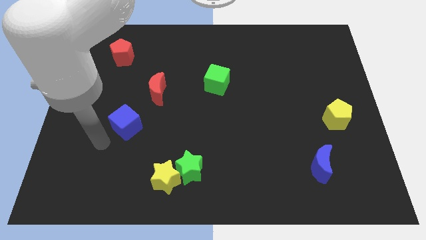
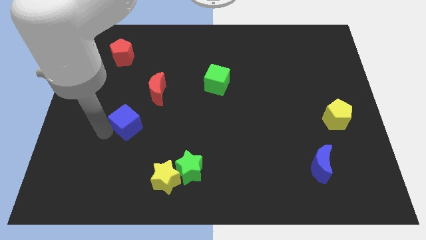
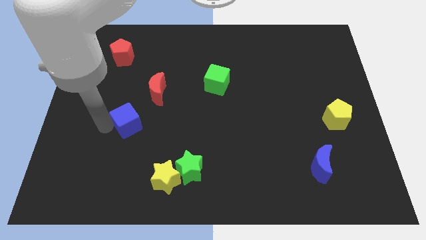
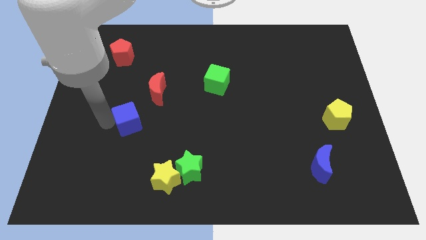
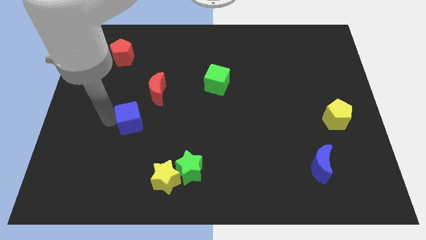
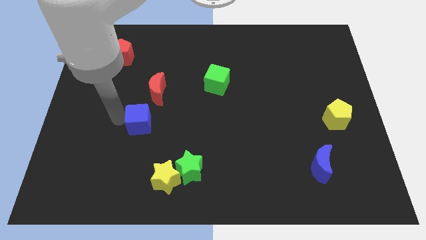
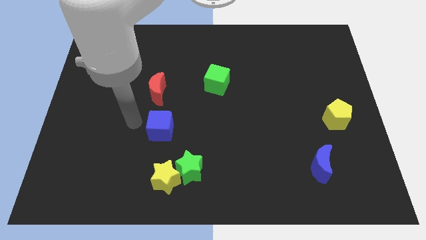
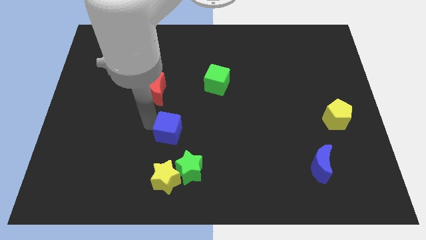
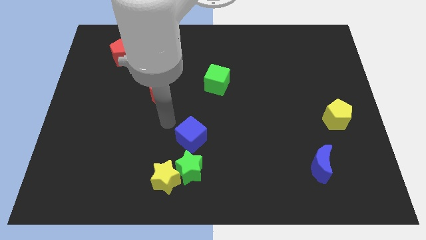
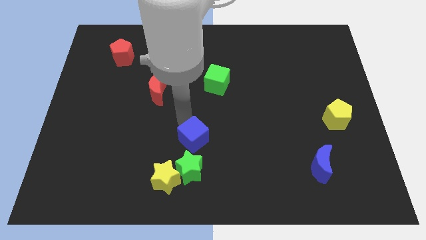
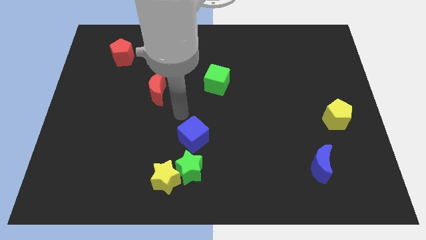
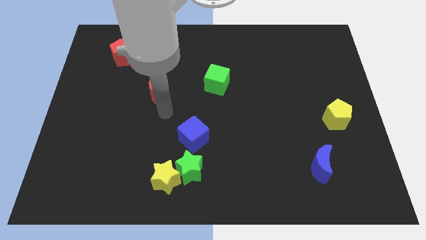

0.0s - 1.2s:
place the blue cube at the top of green star

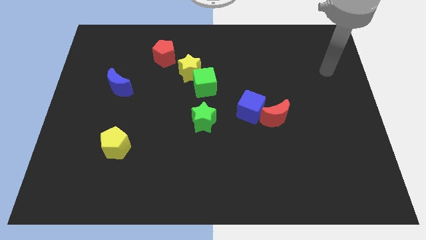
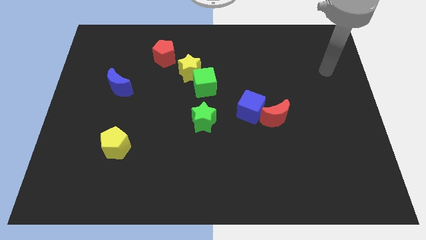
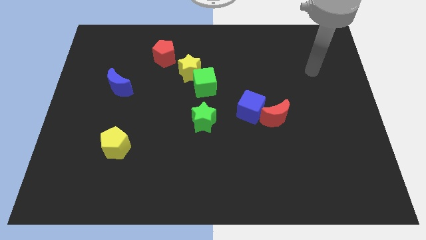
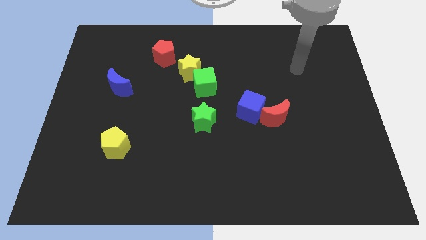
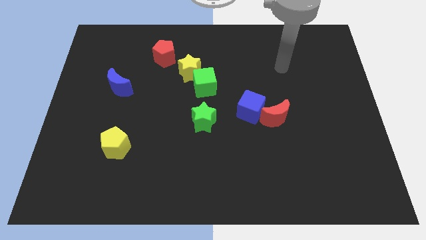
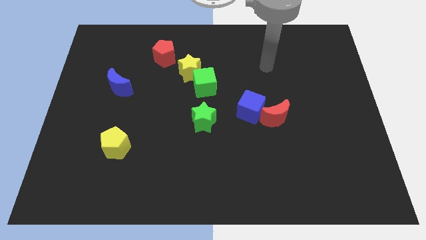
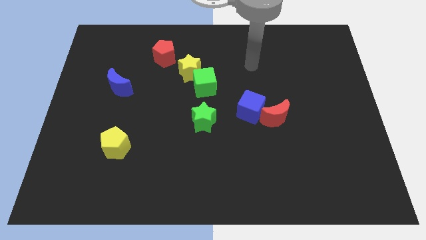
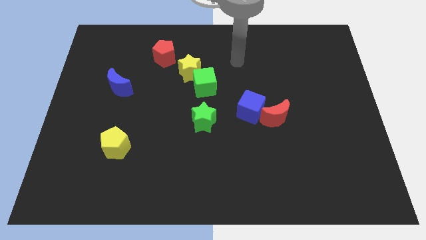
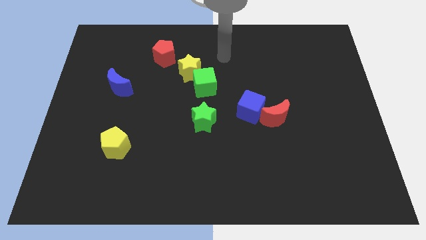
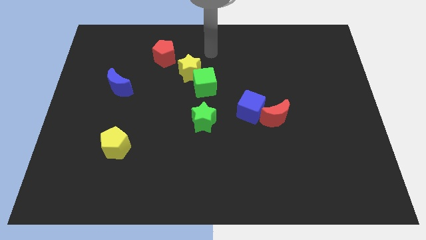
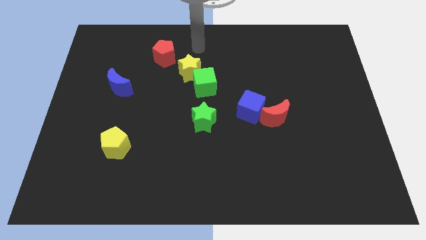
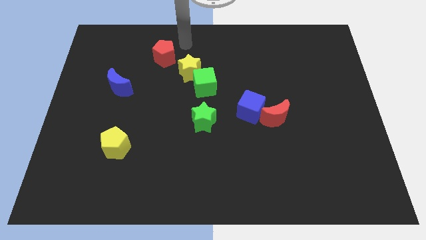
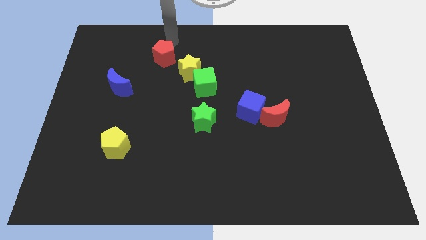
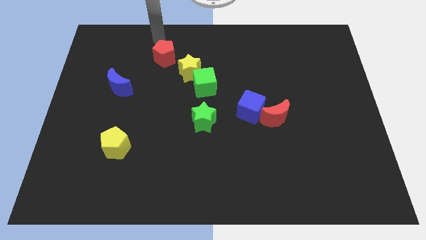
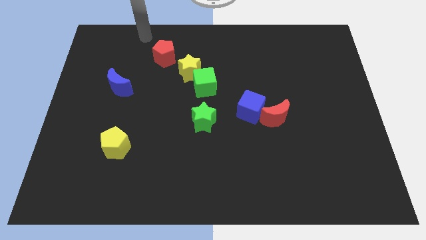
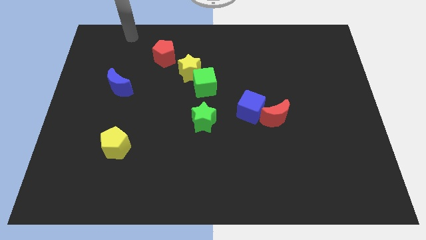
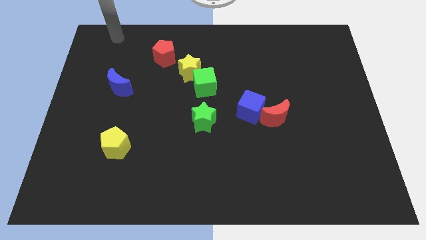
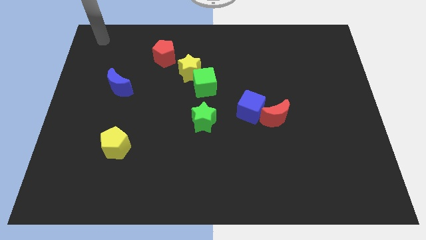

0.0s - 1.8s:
move your arm towards the top left

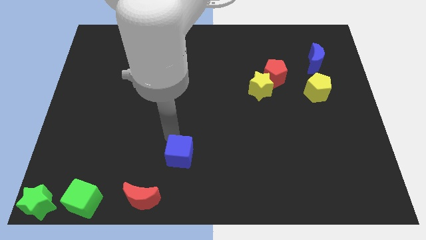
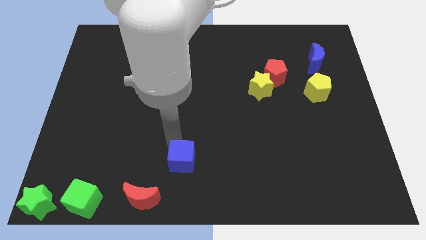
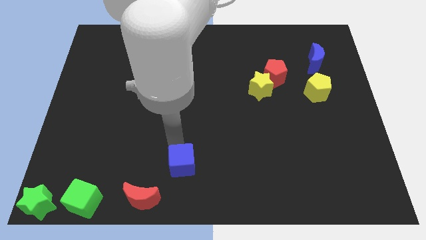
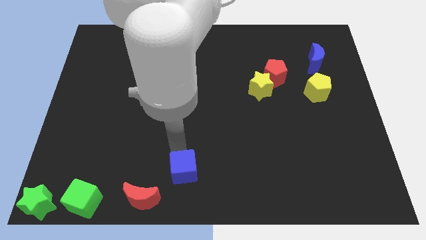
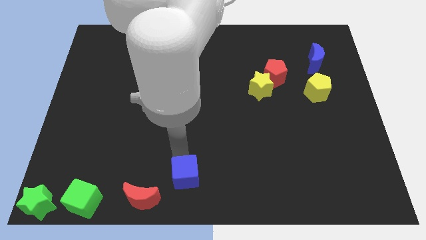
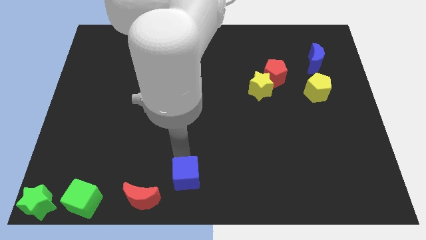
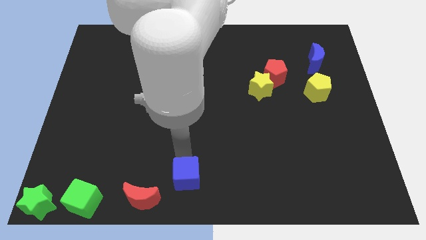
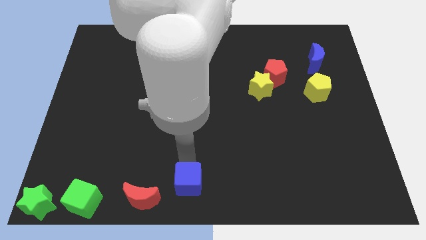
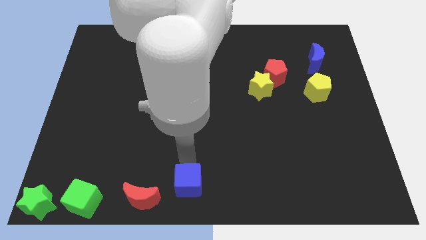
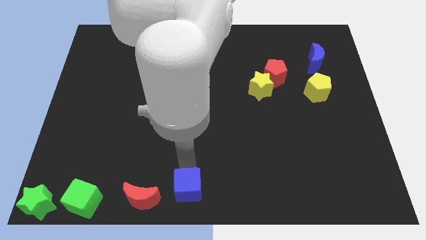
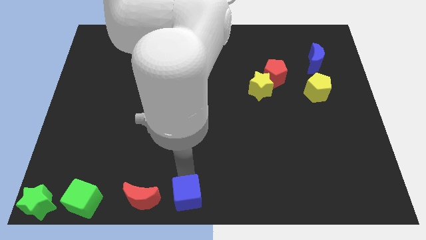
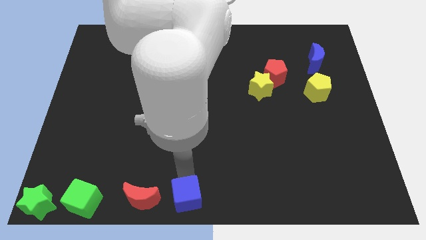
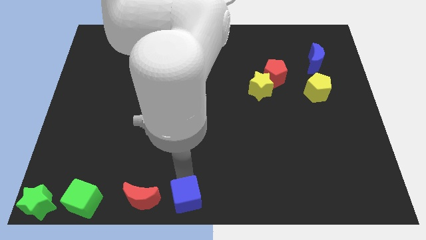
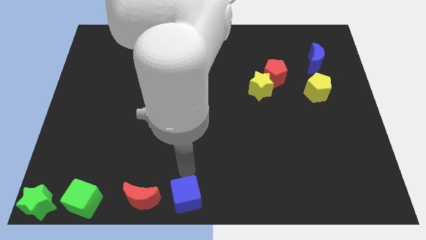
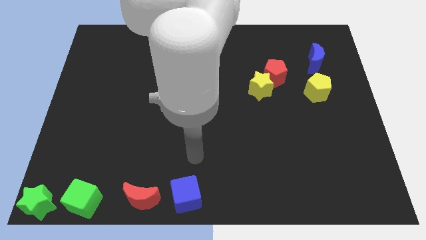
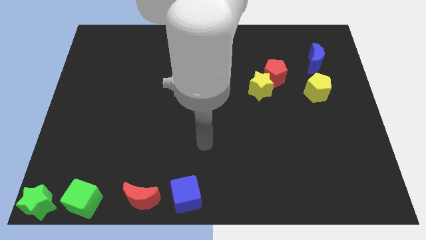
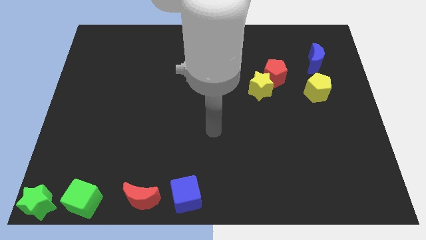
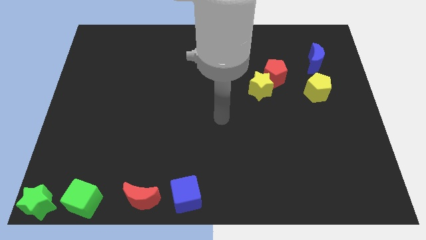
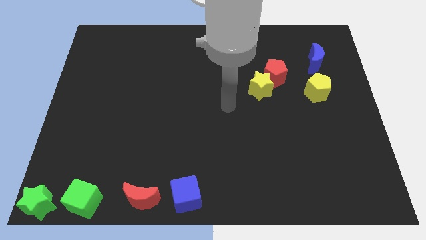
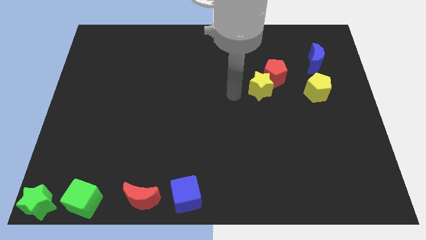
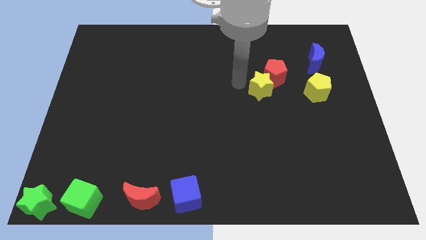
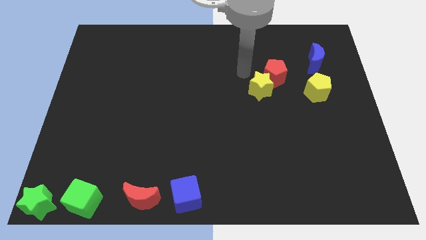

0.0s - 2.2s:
put the blue cube right to the red moon

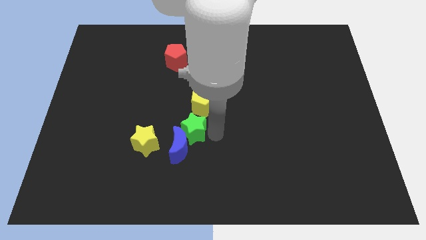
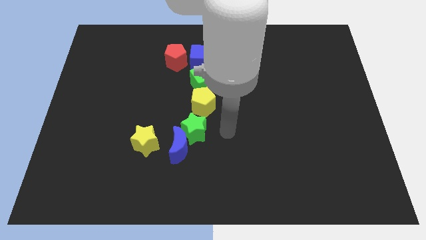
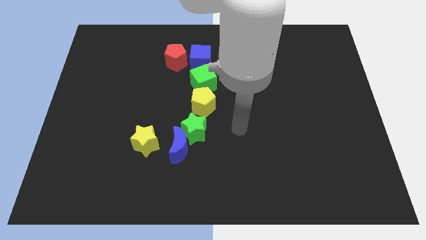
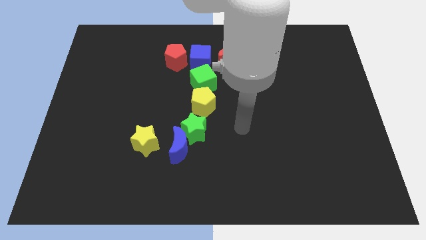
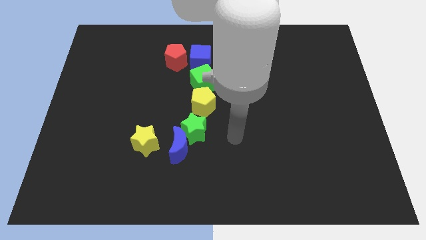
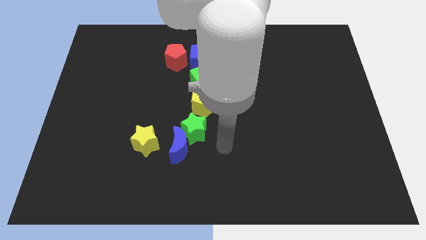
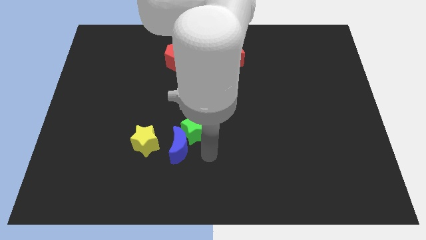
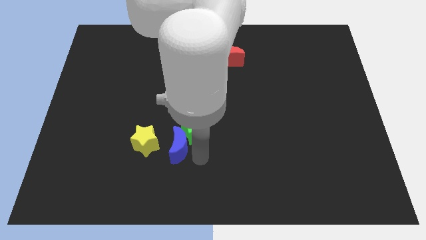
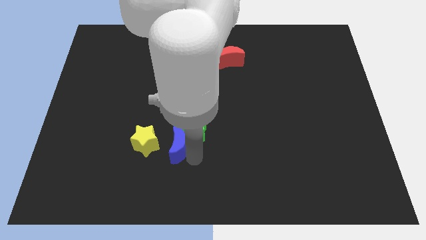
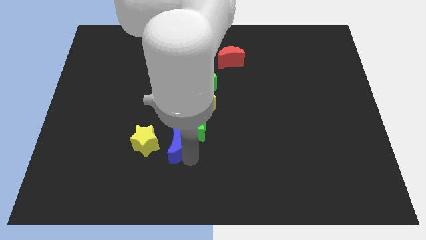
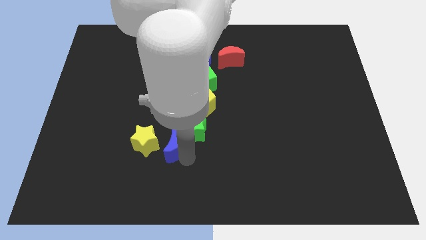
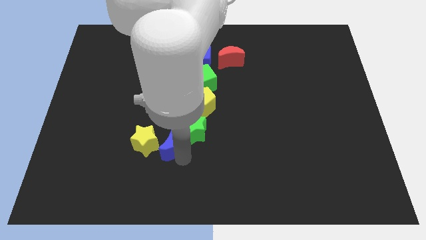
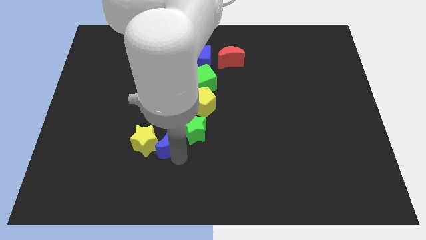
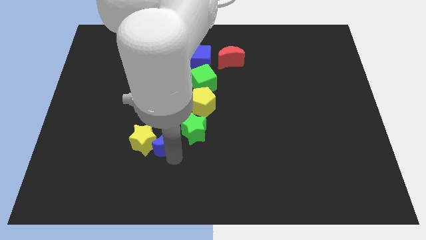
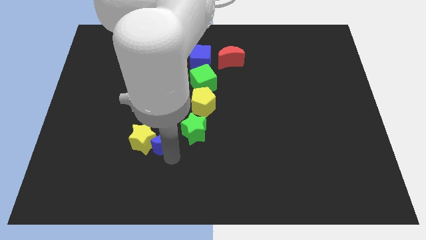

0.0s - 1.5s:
slide the blue crescent into the right side of the yellow star

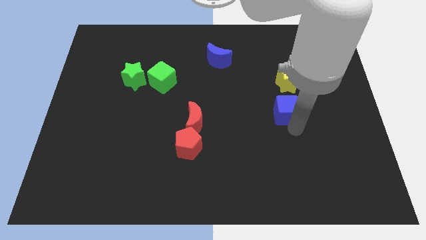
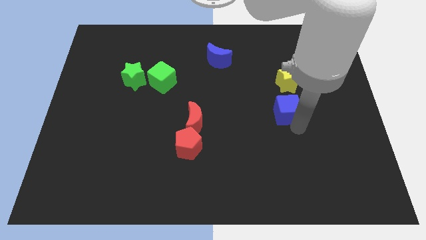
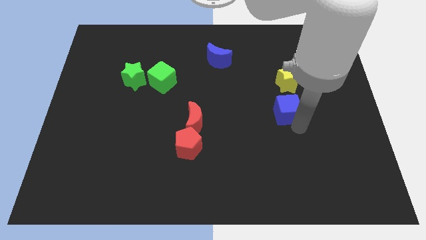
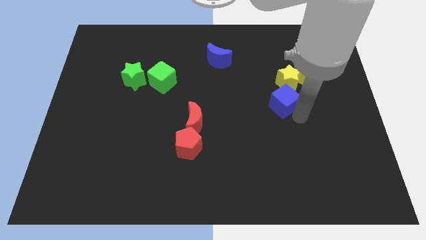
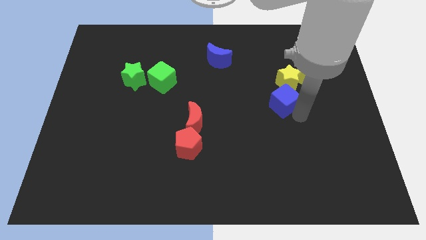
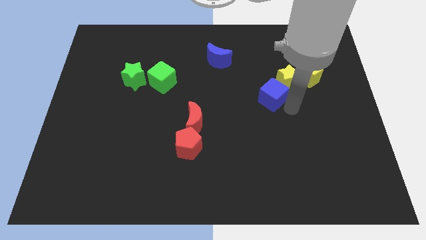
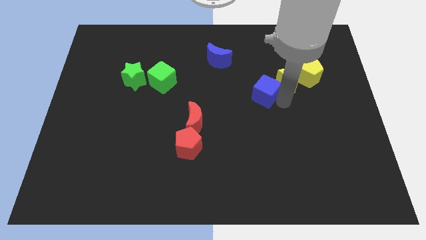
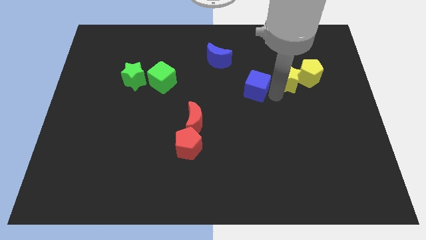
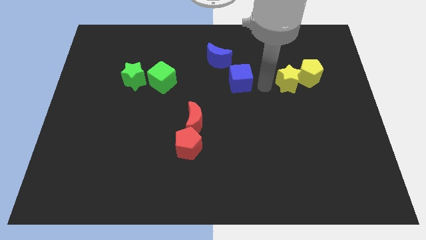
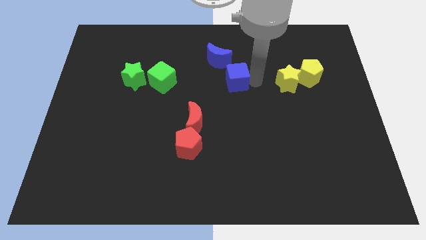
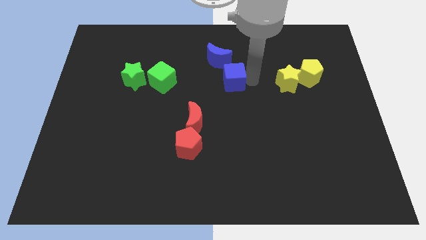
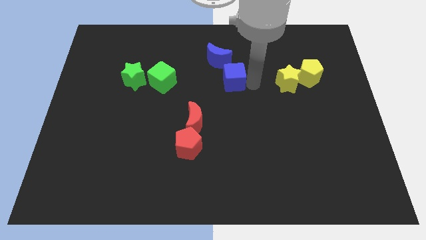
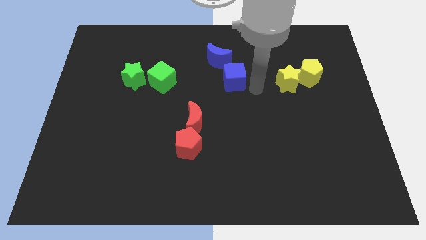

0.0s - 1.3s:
push the blue cube into blue crescent

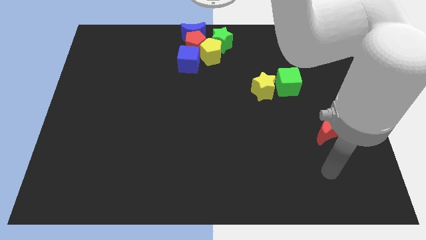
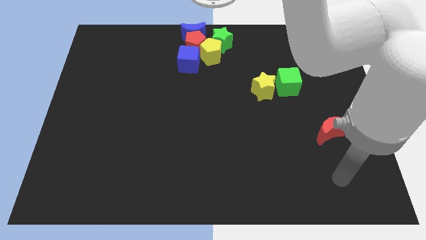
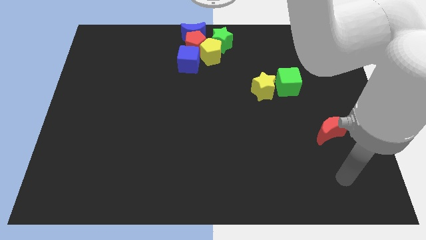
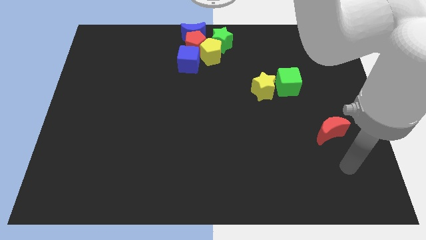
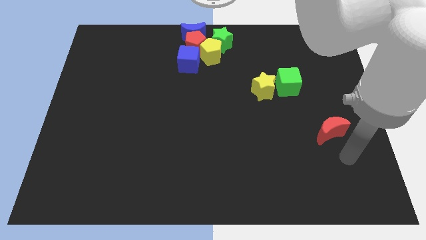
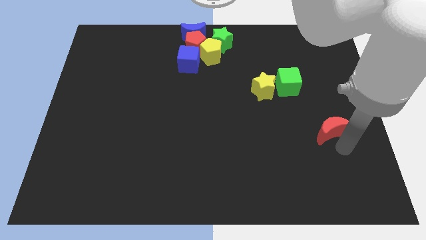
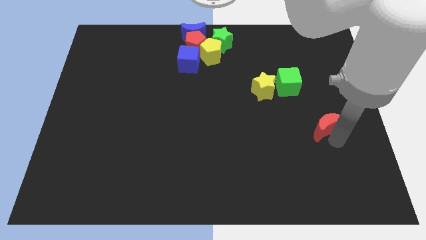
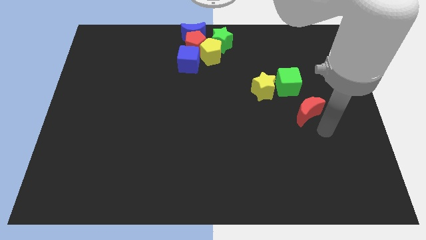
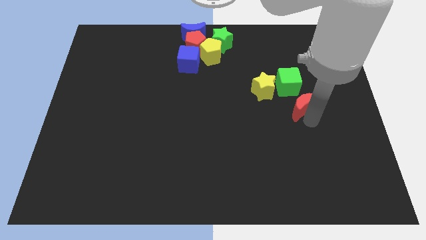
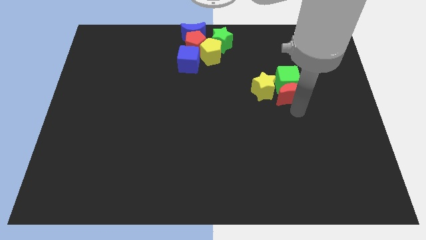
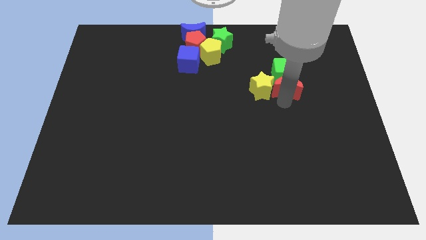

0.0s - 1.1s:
move the red moon into the bottom of the green cube
